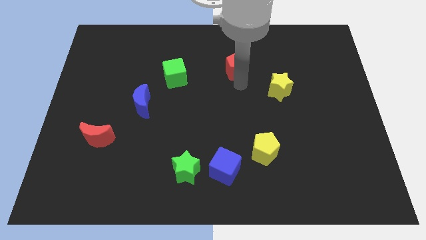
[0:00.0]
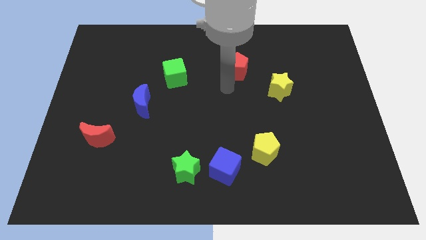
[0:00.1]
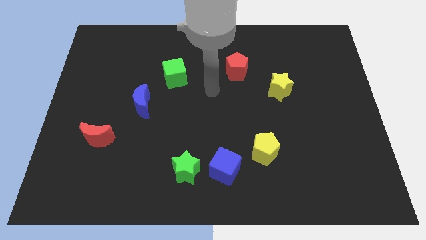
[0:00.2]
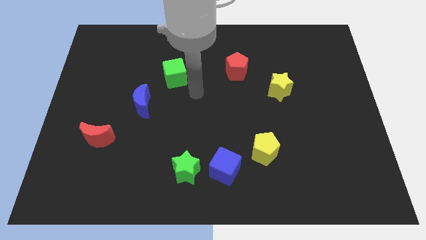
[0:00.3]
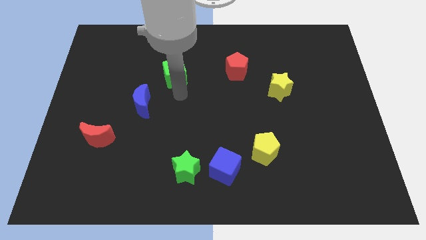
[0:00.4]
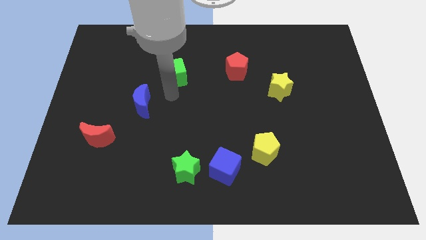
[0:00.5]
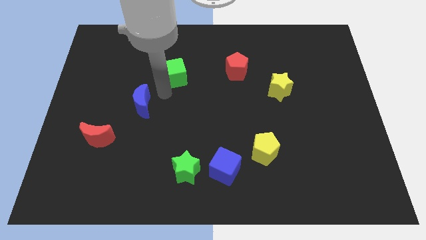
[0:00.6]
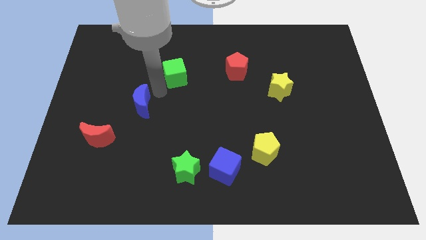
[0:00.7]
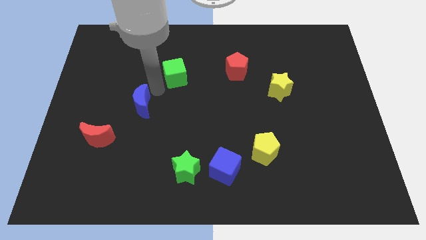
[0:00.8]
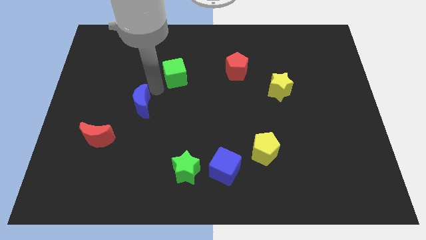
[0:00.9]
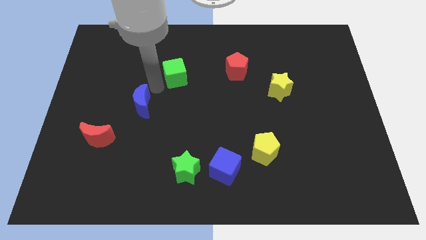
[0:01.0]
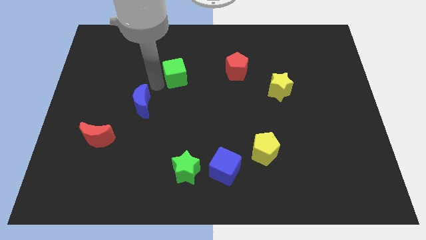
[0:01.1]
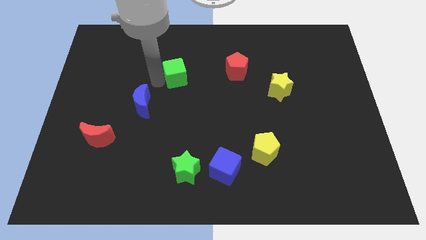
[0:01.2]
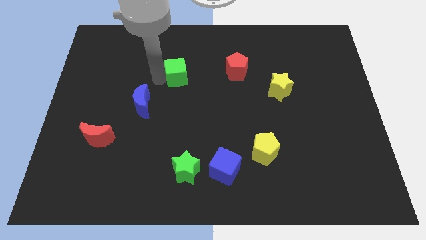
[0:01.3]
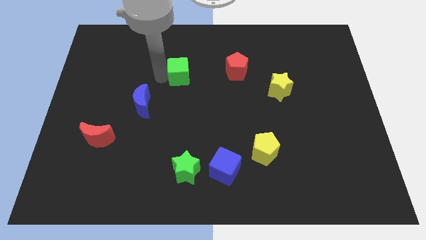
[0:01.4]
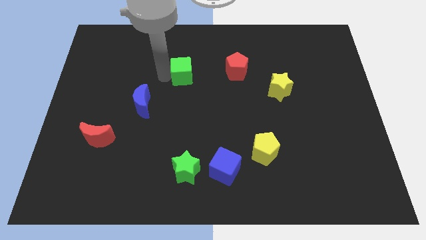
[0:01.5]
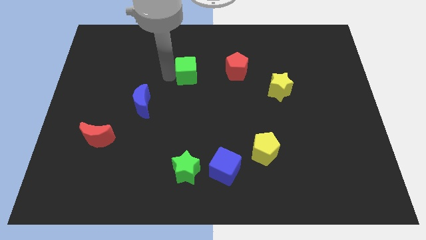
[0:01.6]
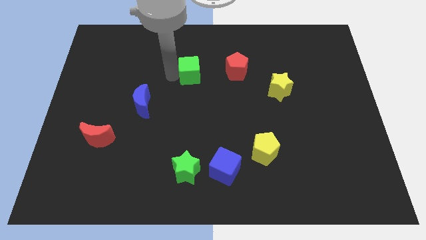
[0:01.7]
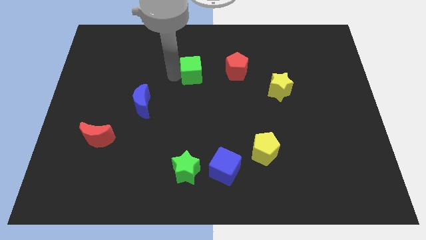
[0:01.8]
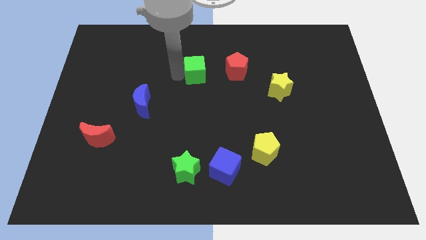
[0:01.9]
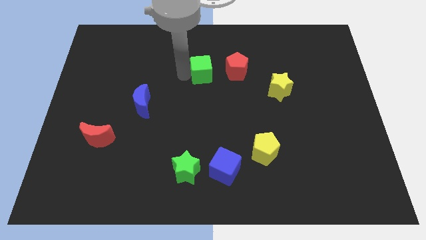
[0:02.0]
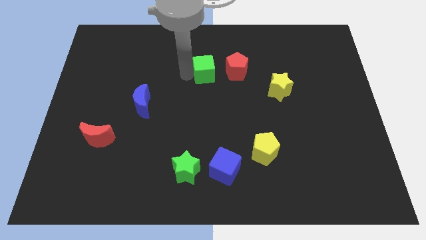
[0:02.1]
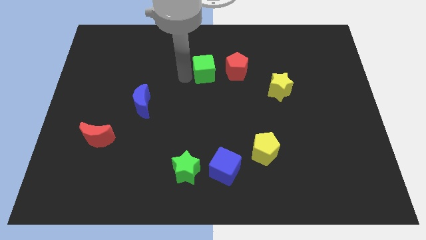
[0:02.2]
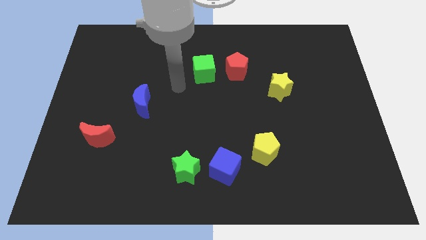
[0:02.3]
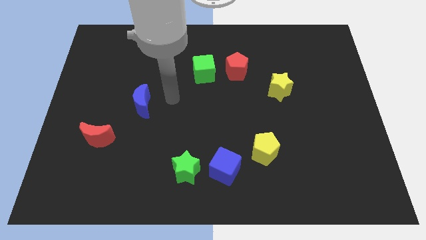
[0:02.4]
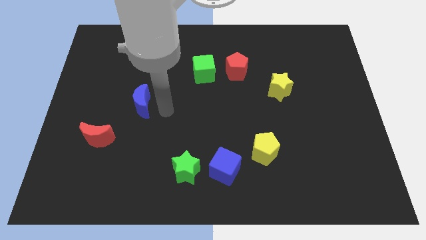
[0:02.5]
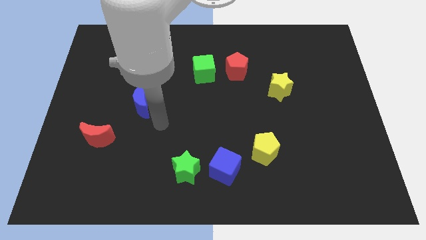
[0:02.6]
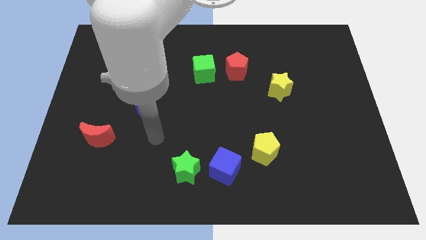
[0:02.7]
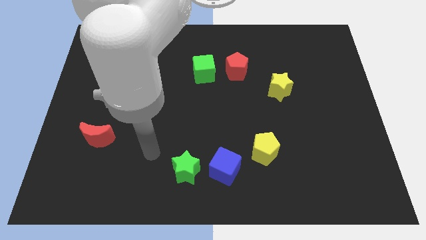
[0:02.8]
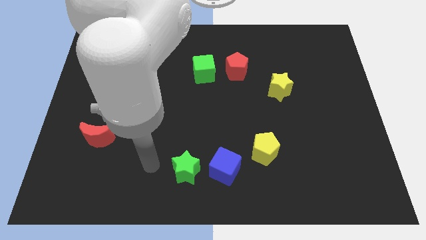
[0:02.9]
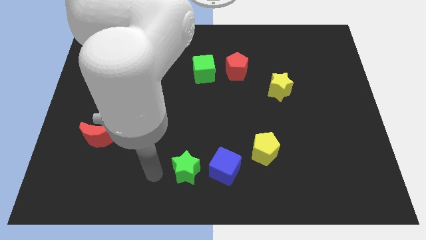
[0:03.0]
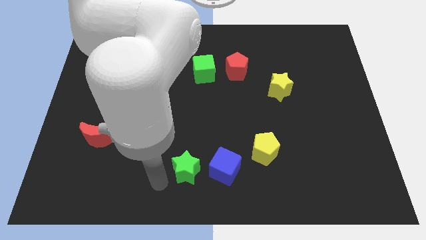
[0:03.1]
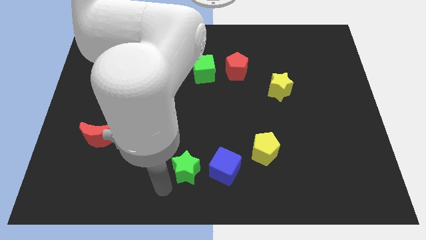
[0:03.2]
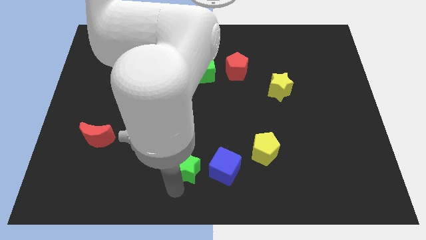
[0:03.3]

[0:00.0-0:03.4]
move the green cube towards the red pentagon

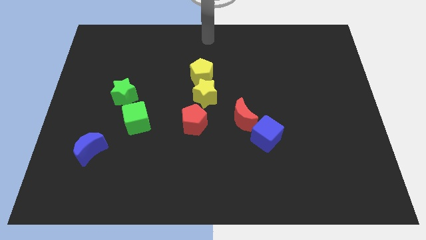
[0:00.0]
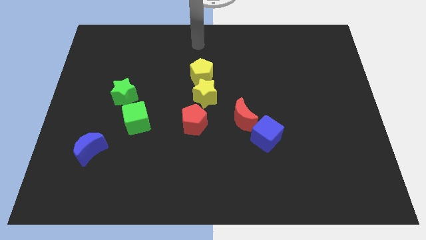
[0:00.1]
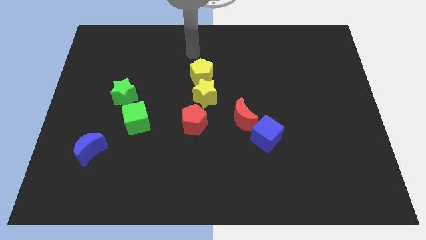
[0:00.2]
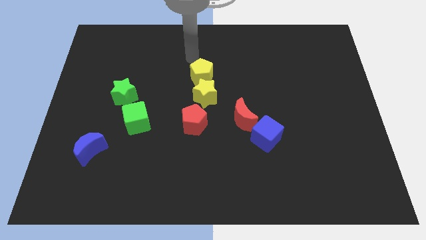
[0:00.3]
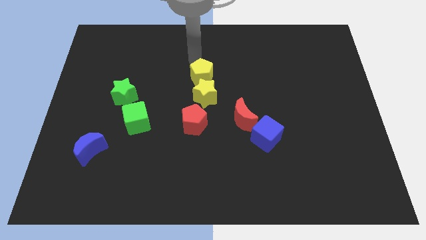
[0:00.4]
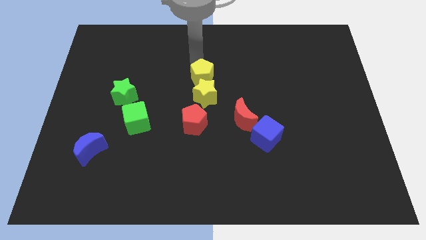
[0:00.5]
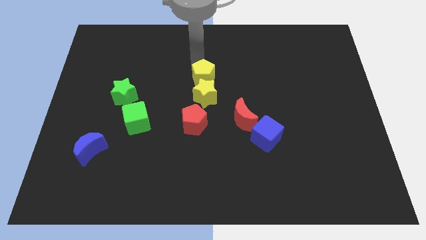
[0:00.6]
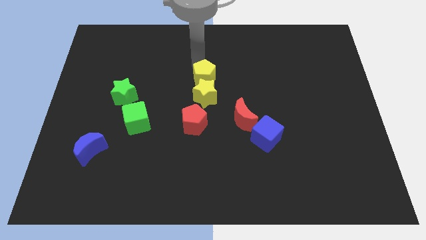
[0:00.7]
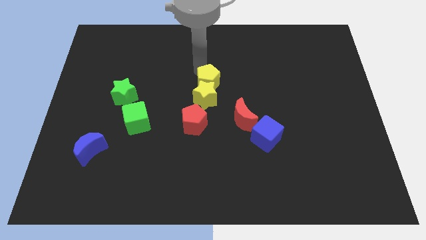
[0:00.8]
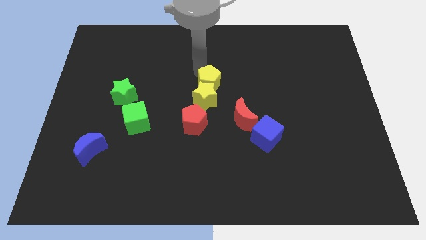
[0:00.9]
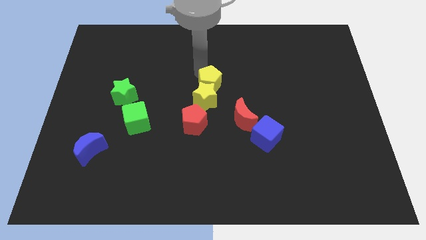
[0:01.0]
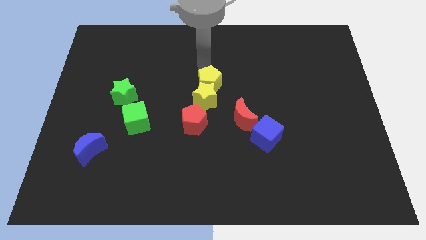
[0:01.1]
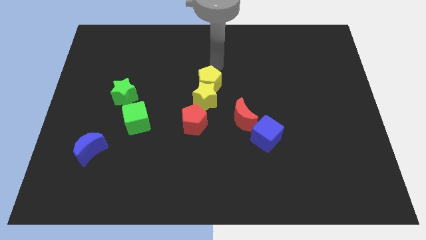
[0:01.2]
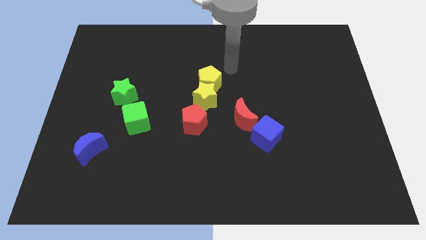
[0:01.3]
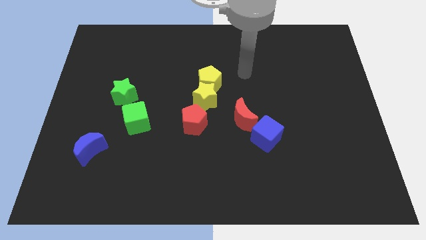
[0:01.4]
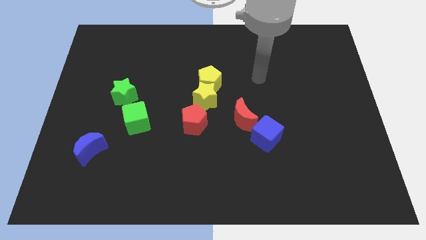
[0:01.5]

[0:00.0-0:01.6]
push yellow pentagon into the yellow star

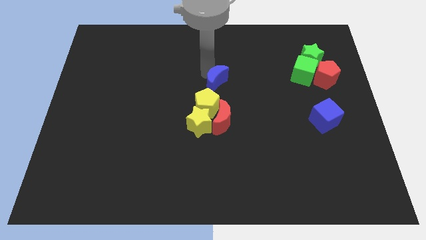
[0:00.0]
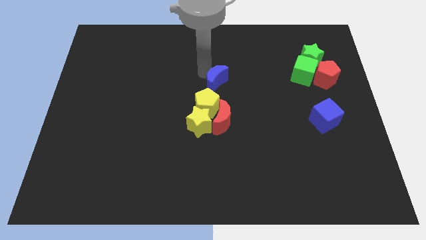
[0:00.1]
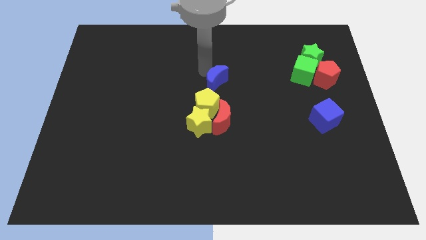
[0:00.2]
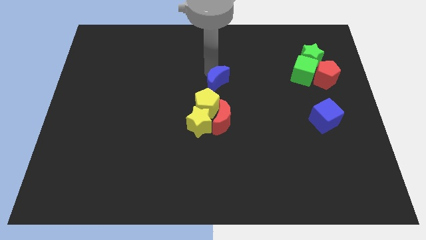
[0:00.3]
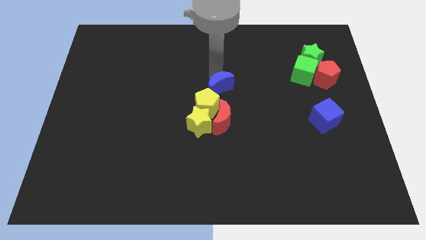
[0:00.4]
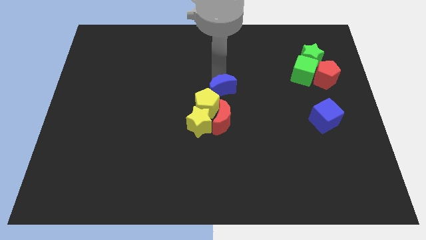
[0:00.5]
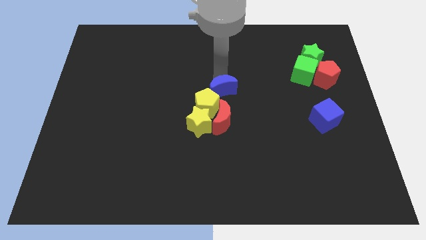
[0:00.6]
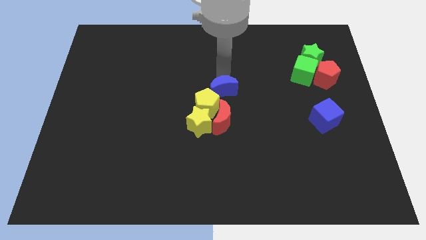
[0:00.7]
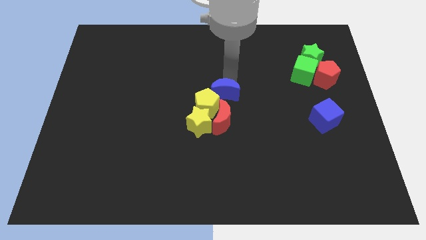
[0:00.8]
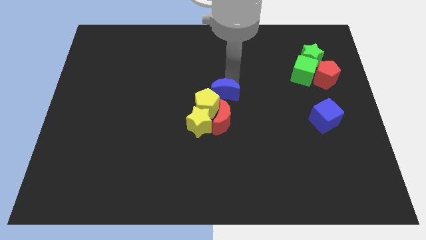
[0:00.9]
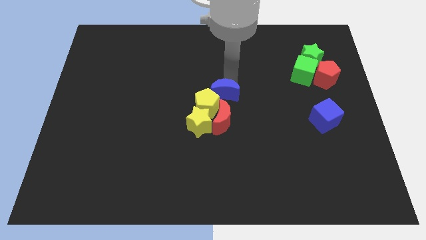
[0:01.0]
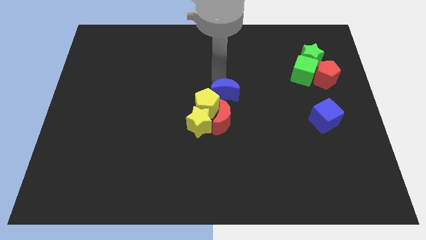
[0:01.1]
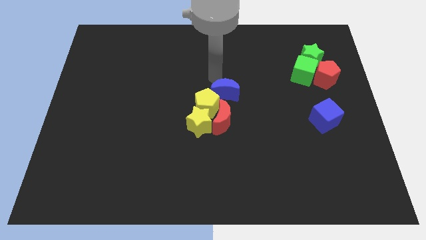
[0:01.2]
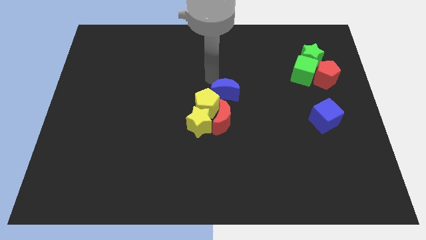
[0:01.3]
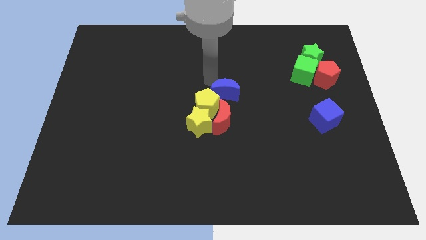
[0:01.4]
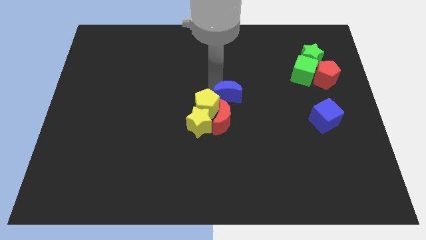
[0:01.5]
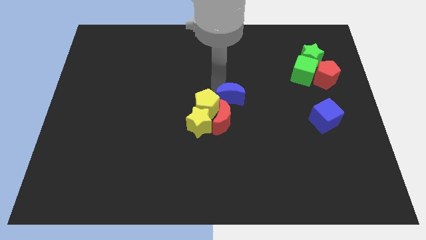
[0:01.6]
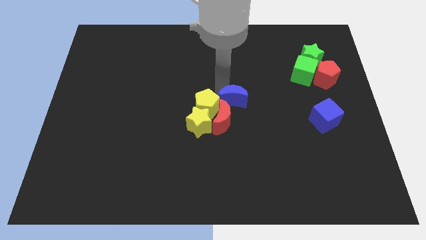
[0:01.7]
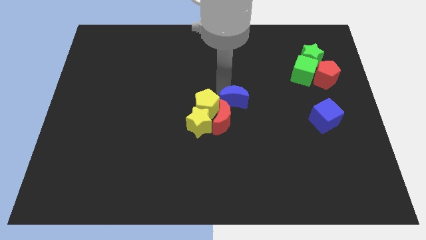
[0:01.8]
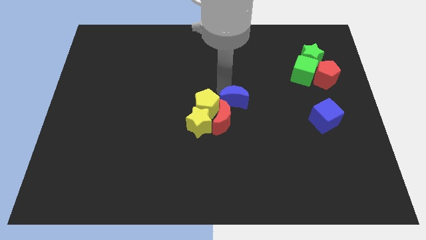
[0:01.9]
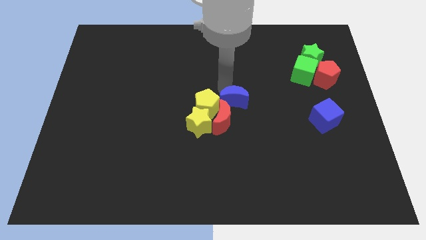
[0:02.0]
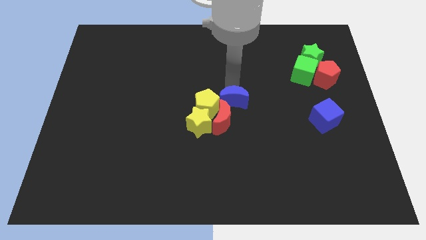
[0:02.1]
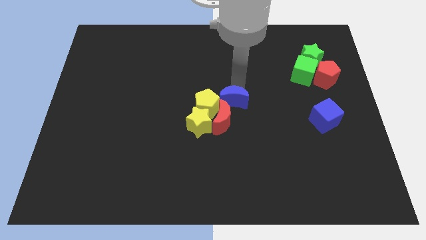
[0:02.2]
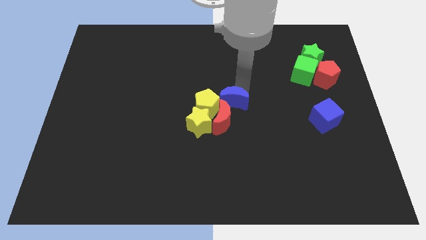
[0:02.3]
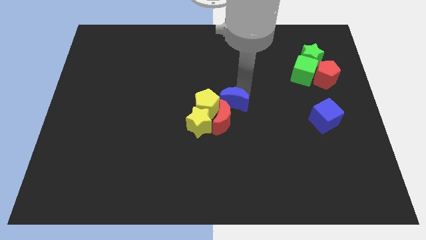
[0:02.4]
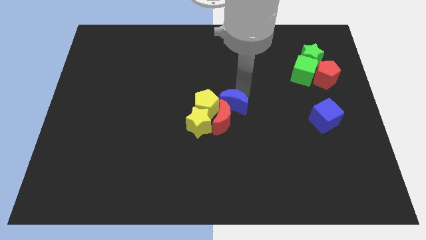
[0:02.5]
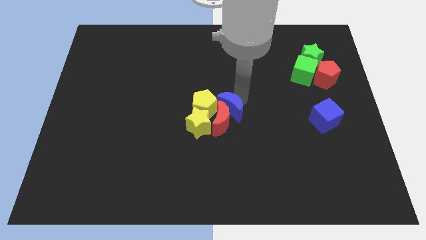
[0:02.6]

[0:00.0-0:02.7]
push the blue crescent into the red crescent

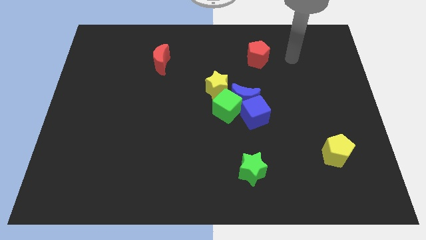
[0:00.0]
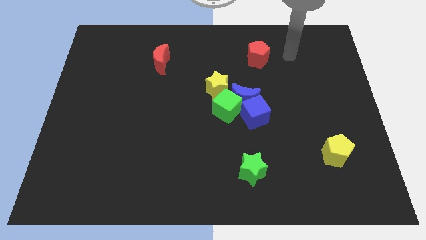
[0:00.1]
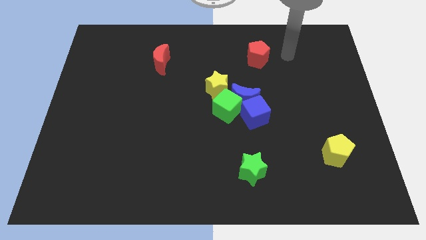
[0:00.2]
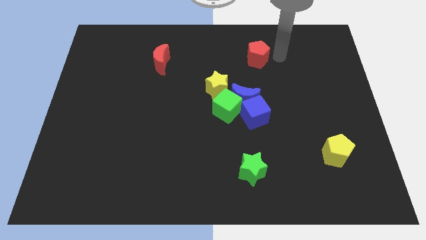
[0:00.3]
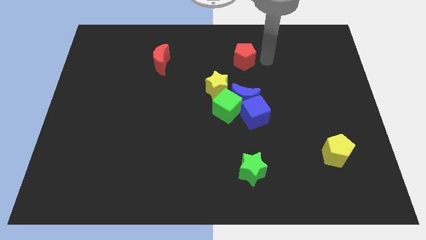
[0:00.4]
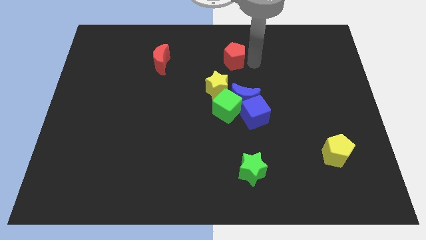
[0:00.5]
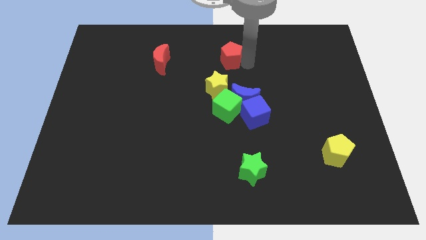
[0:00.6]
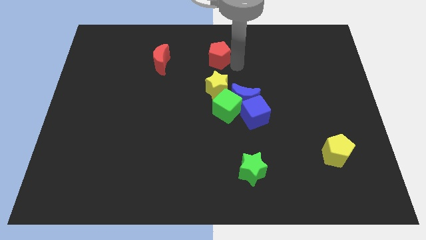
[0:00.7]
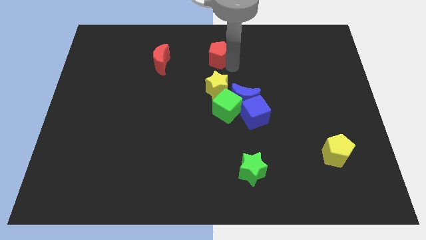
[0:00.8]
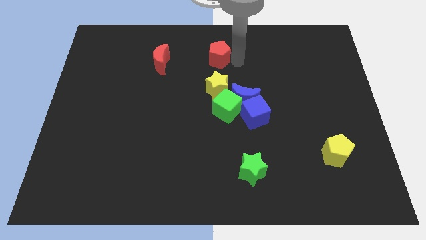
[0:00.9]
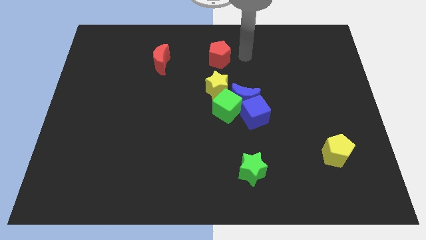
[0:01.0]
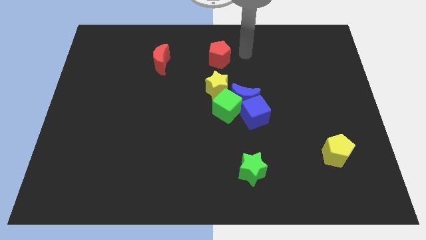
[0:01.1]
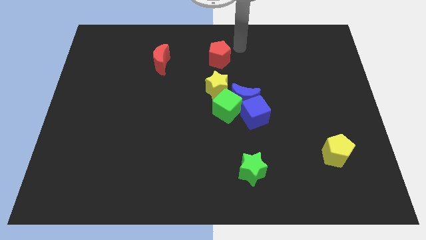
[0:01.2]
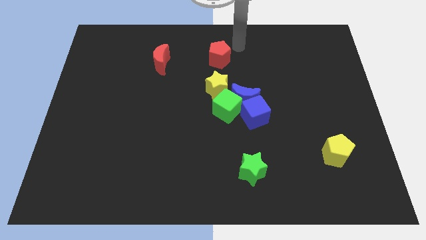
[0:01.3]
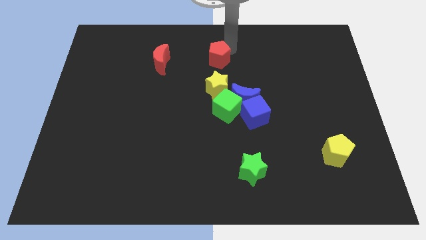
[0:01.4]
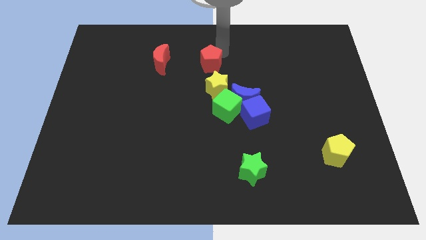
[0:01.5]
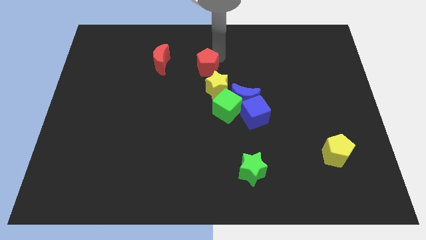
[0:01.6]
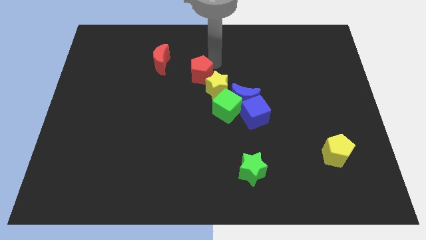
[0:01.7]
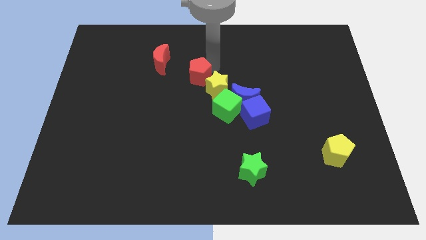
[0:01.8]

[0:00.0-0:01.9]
drag the red pentagon diagonally bottom right to the red crescent
